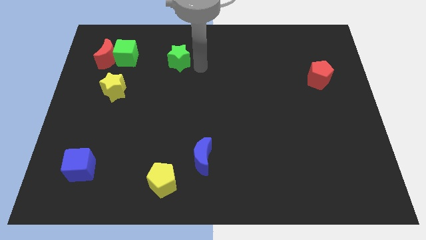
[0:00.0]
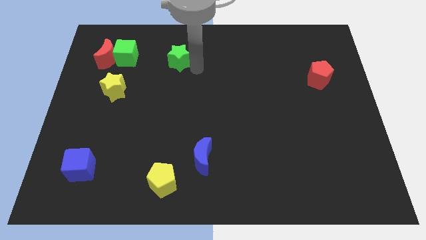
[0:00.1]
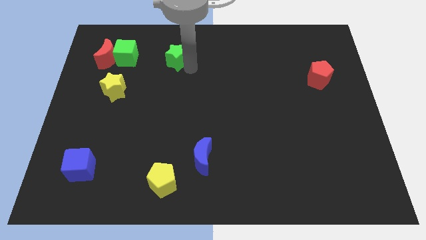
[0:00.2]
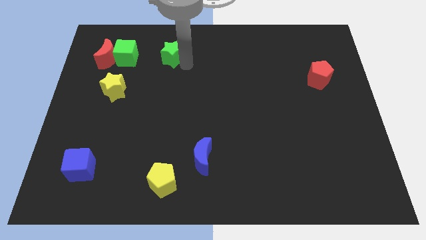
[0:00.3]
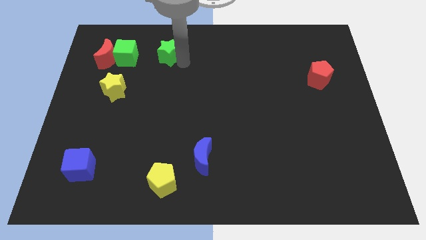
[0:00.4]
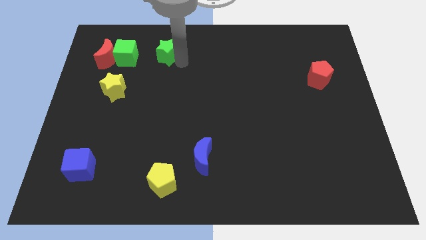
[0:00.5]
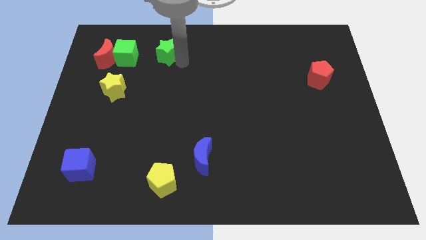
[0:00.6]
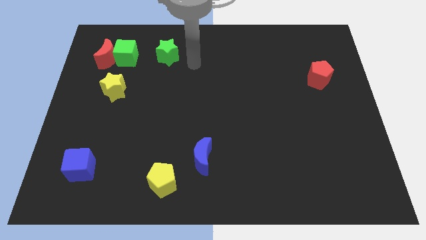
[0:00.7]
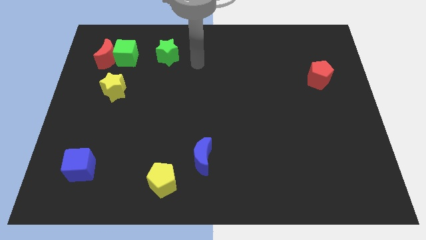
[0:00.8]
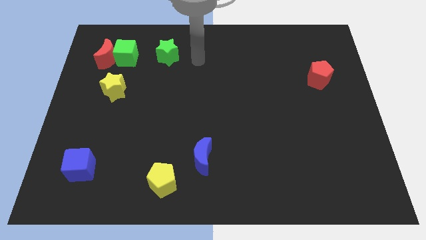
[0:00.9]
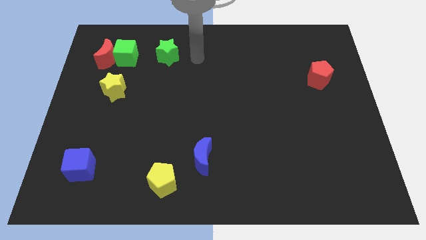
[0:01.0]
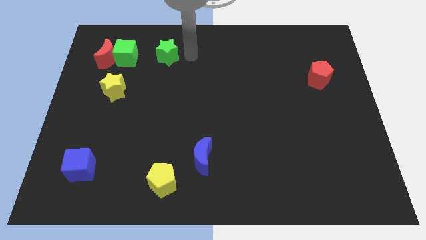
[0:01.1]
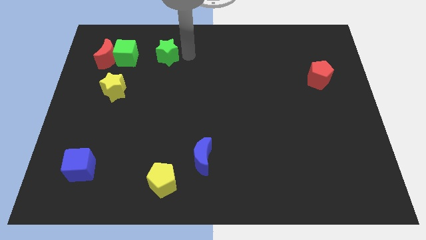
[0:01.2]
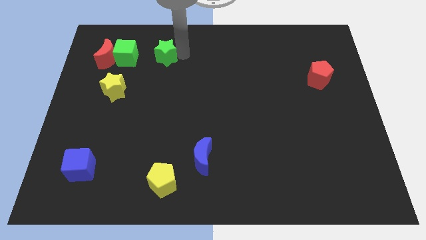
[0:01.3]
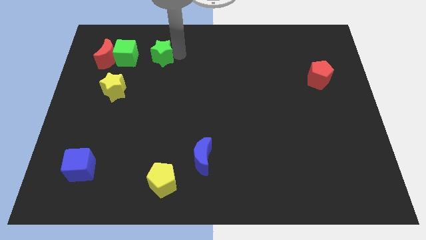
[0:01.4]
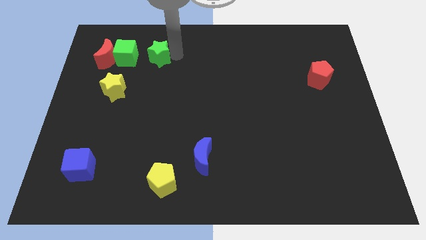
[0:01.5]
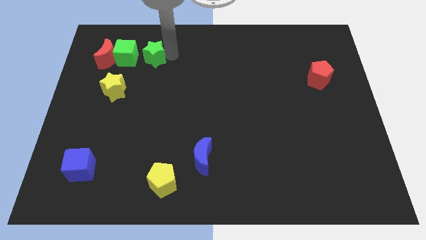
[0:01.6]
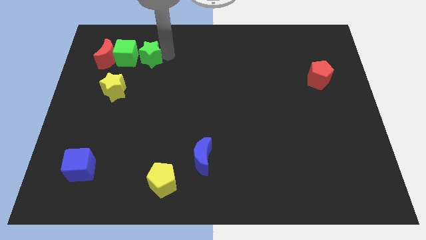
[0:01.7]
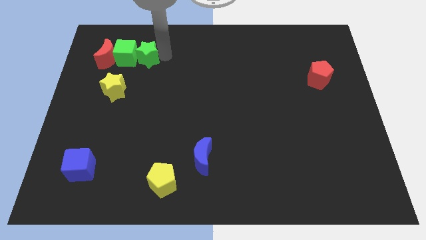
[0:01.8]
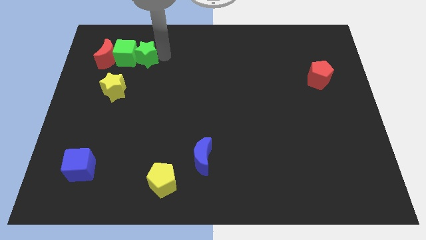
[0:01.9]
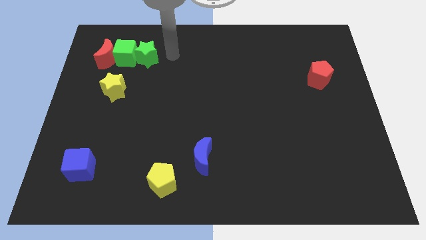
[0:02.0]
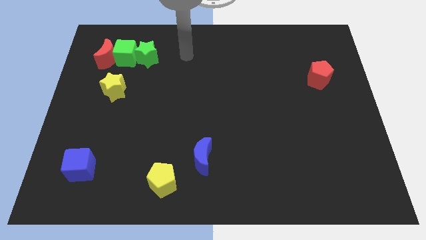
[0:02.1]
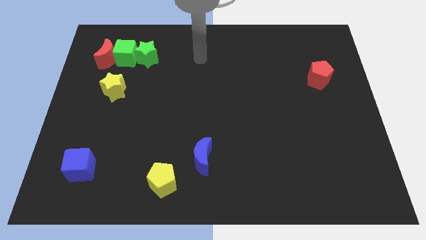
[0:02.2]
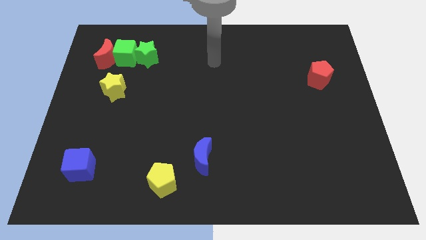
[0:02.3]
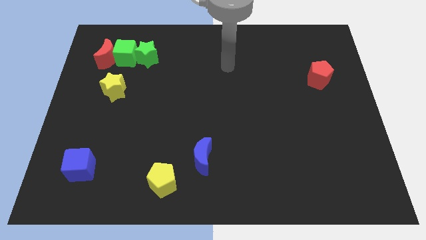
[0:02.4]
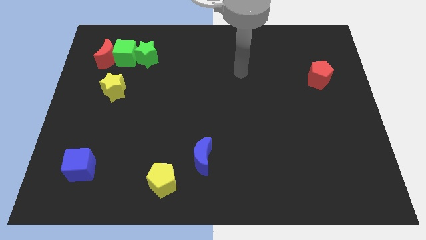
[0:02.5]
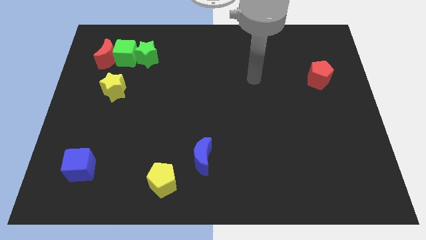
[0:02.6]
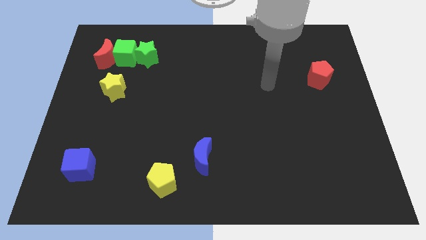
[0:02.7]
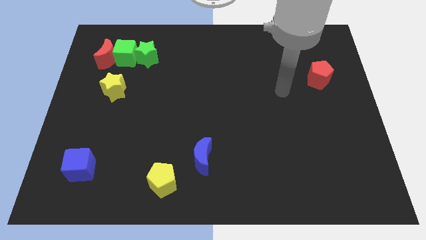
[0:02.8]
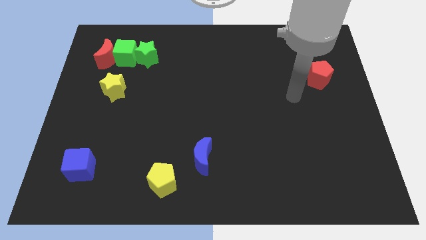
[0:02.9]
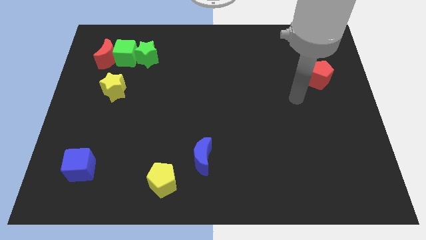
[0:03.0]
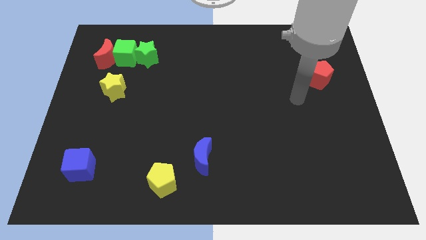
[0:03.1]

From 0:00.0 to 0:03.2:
slightly push the green star into the green cube

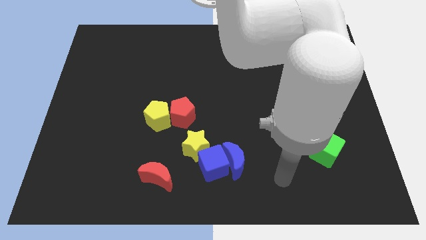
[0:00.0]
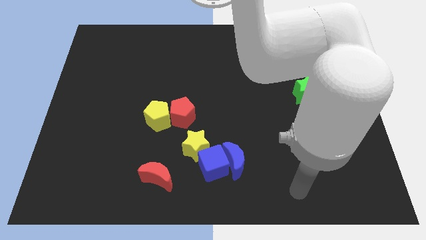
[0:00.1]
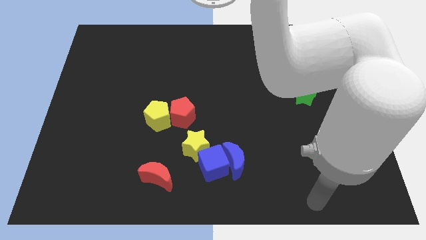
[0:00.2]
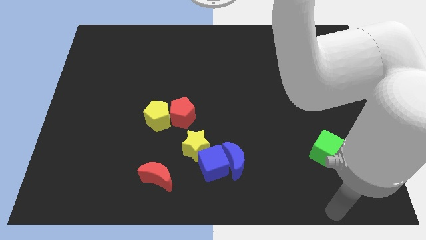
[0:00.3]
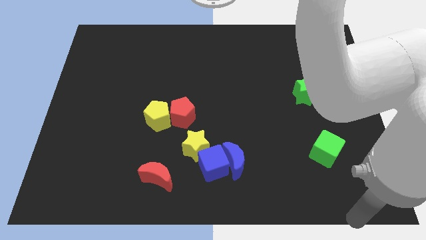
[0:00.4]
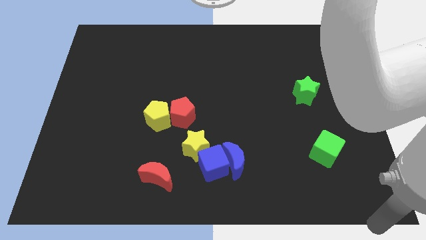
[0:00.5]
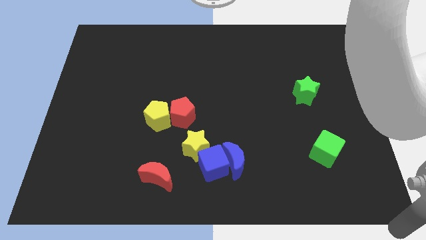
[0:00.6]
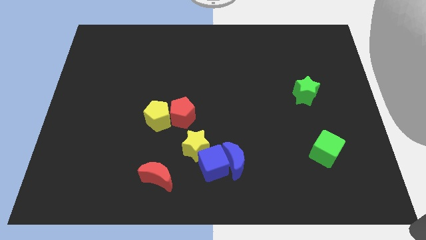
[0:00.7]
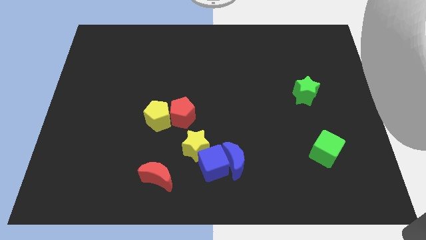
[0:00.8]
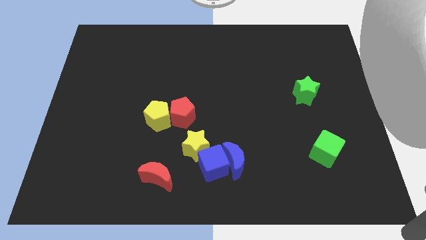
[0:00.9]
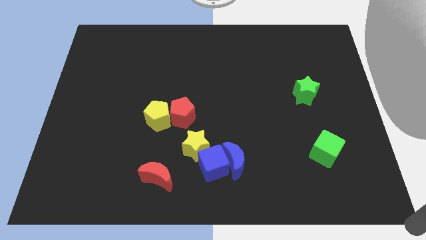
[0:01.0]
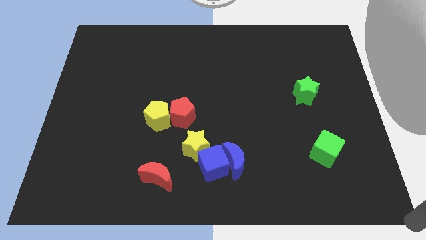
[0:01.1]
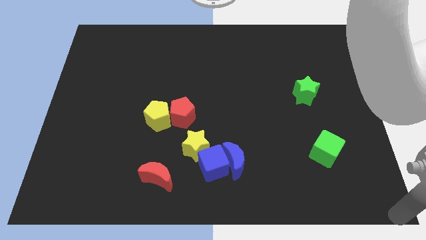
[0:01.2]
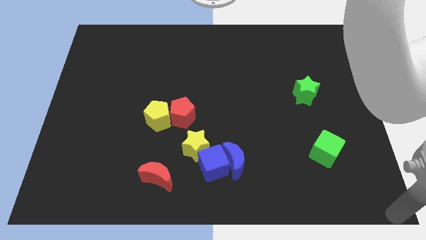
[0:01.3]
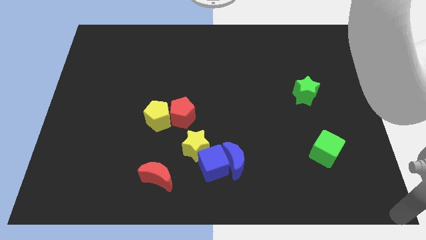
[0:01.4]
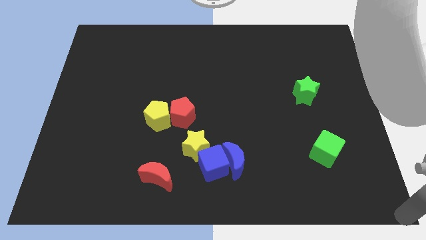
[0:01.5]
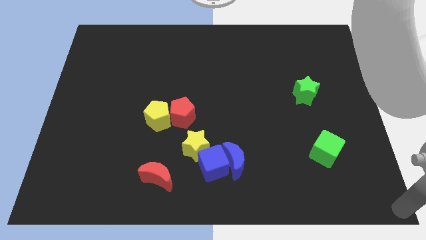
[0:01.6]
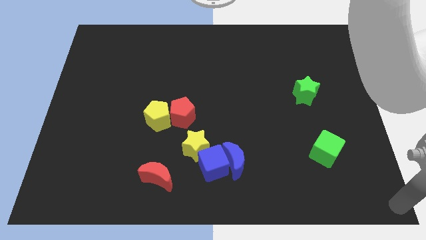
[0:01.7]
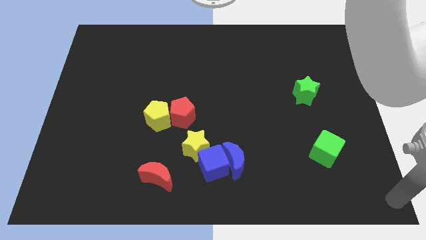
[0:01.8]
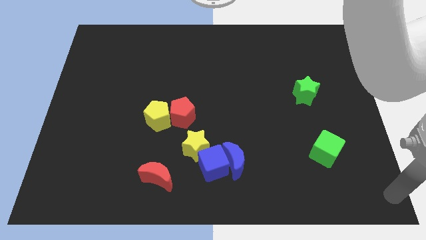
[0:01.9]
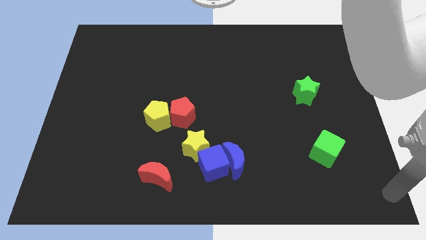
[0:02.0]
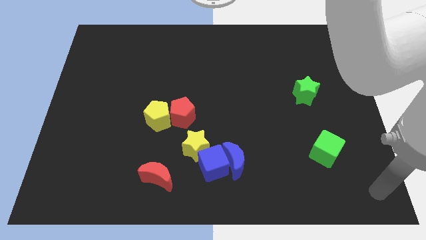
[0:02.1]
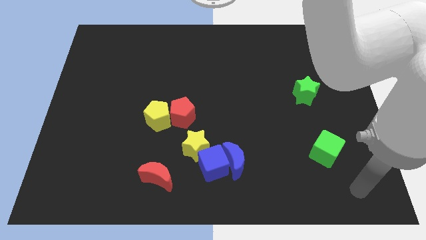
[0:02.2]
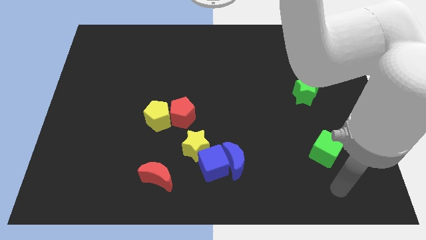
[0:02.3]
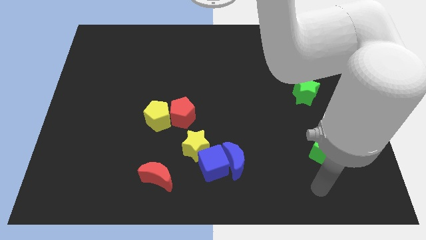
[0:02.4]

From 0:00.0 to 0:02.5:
point your hand below the green cube

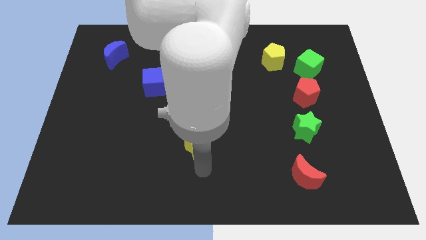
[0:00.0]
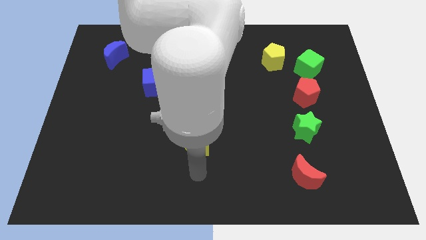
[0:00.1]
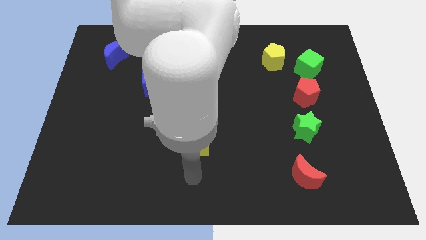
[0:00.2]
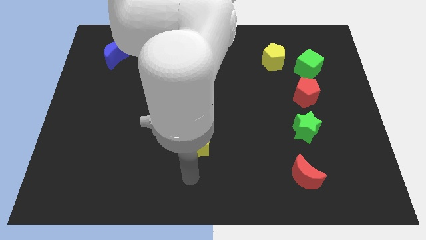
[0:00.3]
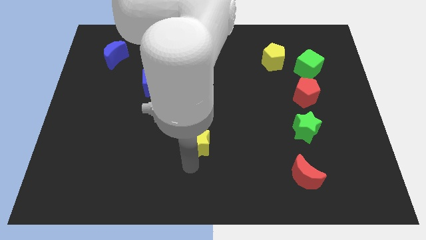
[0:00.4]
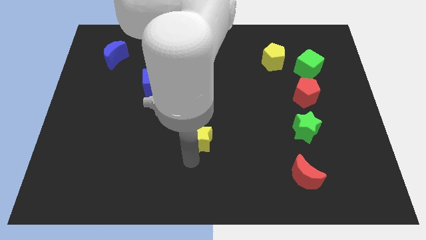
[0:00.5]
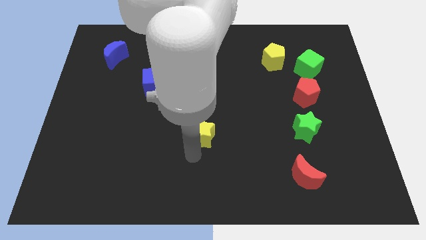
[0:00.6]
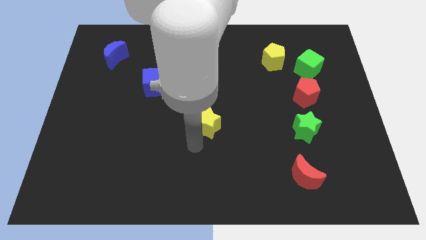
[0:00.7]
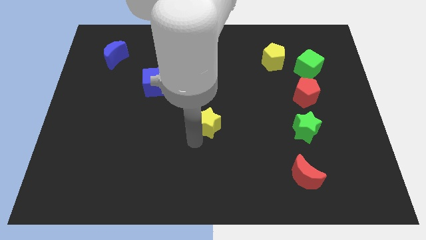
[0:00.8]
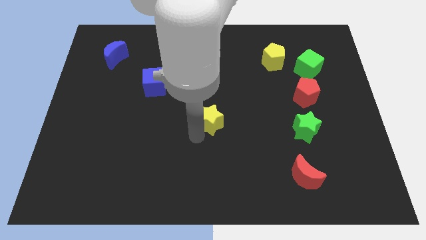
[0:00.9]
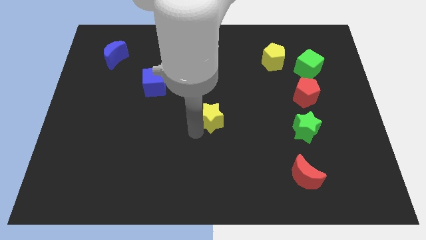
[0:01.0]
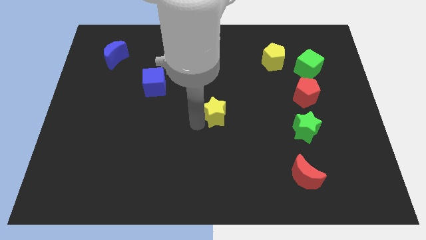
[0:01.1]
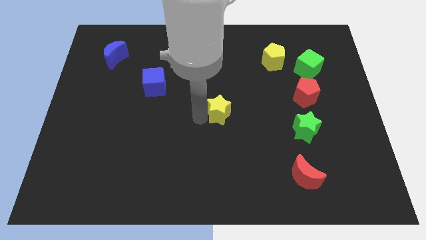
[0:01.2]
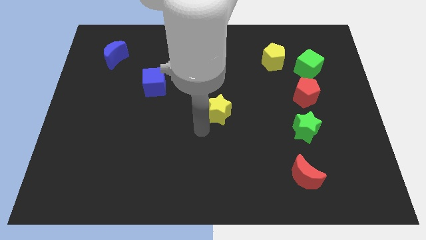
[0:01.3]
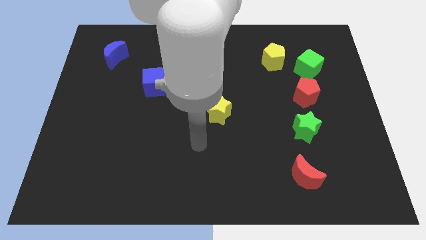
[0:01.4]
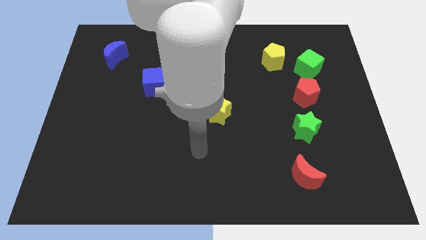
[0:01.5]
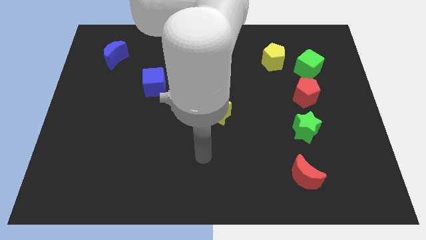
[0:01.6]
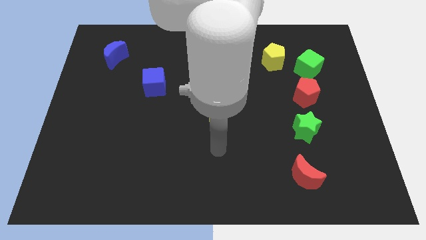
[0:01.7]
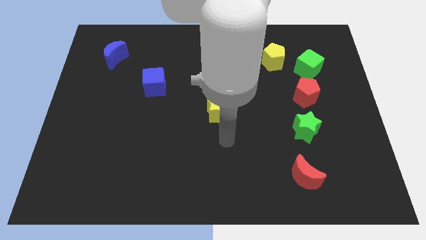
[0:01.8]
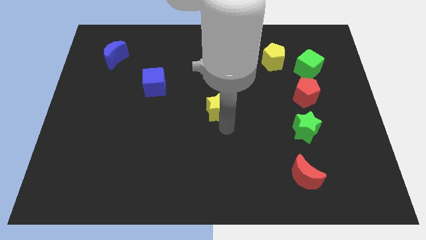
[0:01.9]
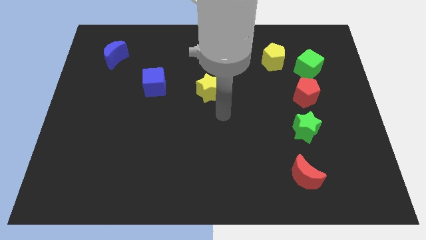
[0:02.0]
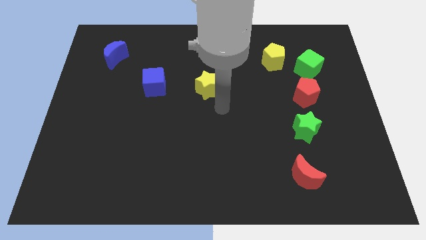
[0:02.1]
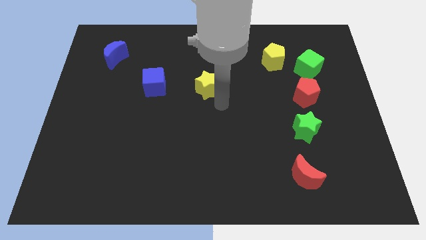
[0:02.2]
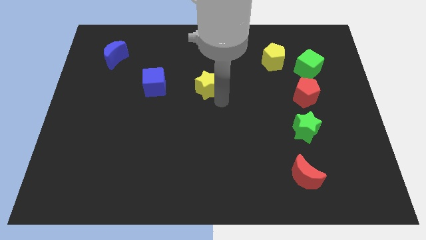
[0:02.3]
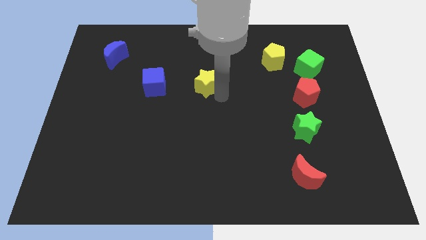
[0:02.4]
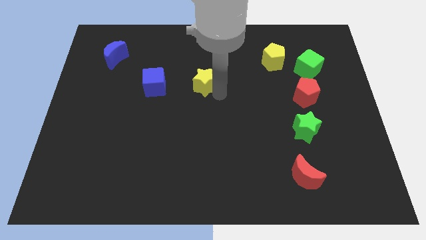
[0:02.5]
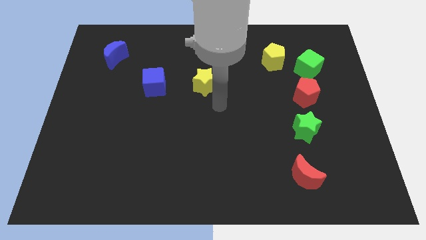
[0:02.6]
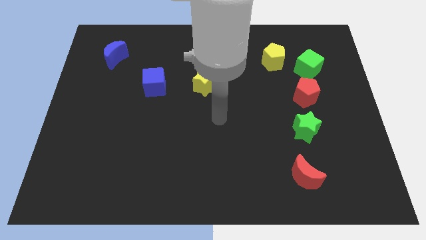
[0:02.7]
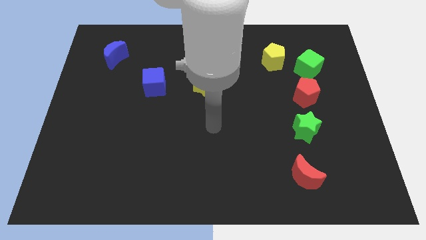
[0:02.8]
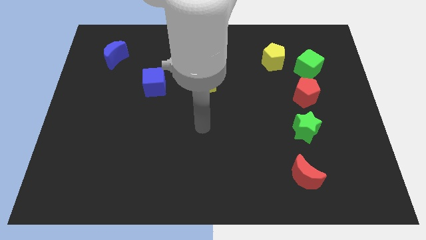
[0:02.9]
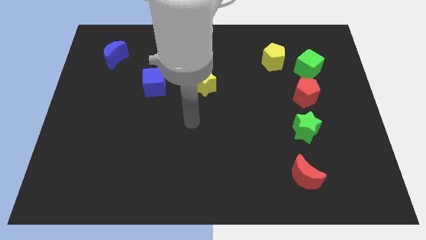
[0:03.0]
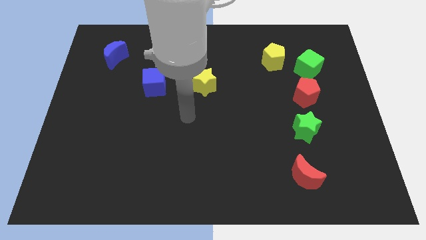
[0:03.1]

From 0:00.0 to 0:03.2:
move yellow star right beside the blue cube
